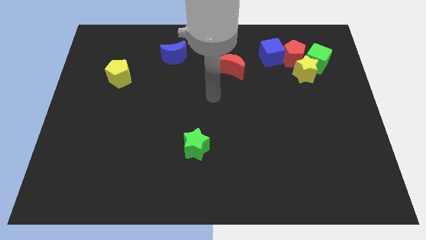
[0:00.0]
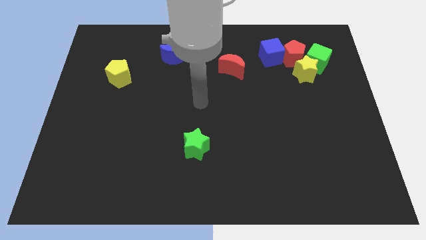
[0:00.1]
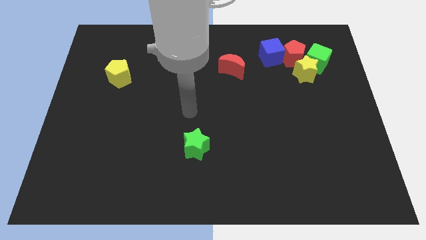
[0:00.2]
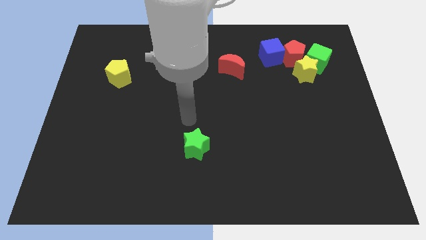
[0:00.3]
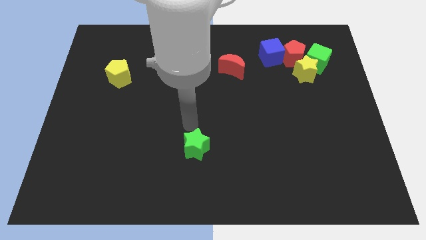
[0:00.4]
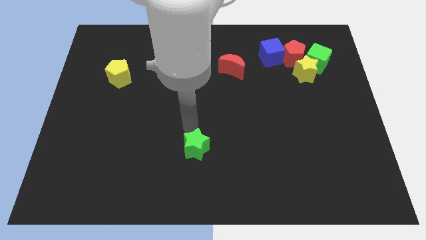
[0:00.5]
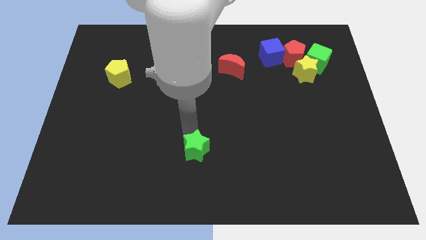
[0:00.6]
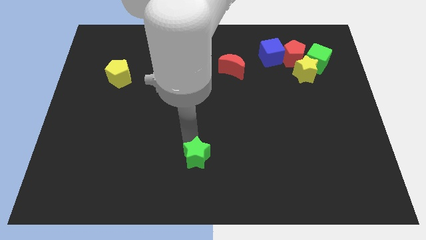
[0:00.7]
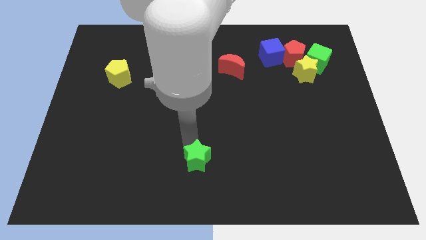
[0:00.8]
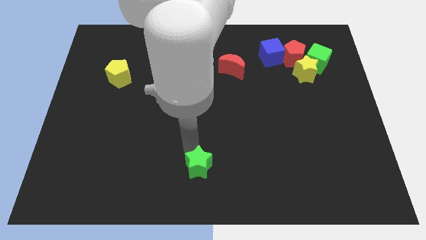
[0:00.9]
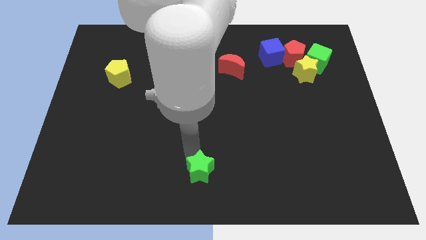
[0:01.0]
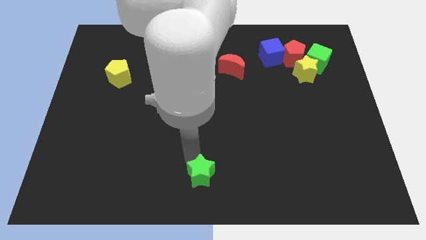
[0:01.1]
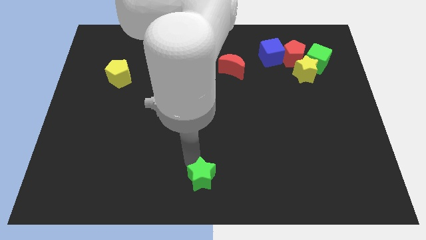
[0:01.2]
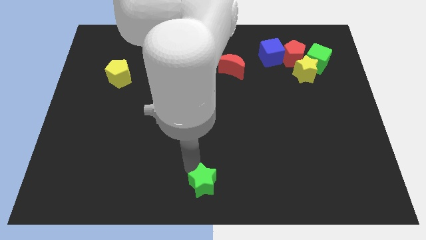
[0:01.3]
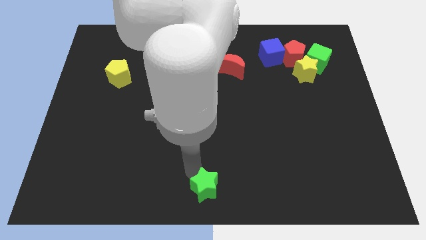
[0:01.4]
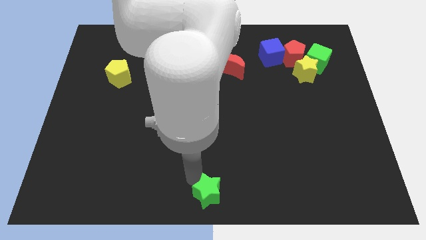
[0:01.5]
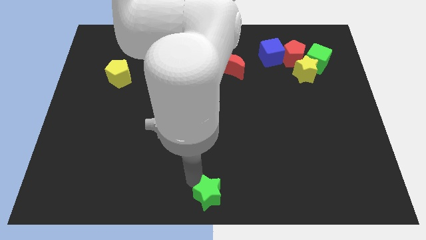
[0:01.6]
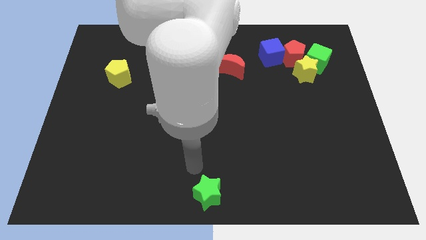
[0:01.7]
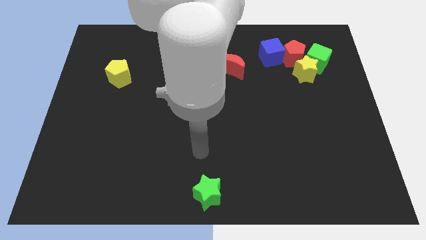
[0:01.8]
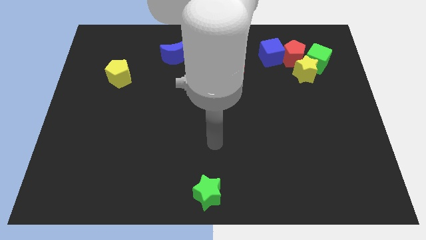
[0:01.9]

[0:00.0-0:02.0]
place the green star at the bottom center of the board

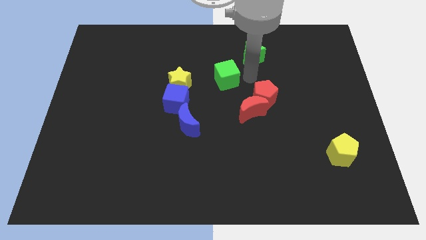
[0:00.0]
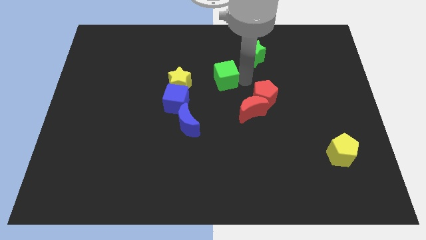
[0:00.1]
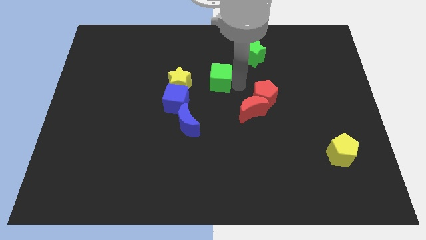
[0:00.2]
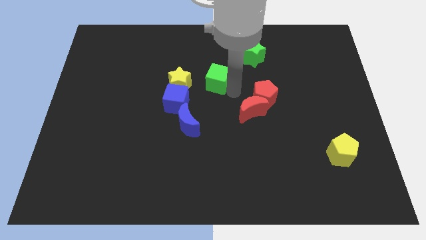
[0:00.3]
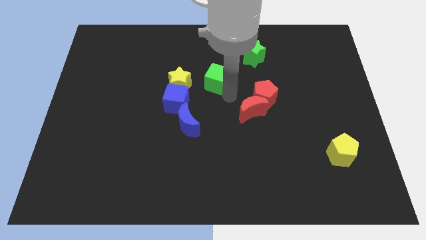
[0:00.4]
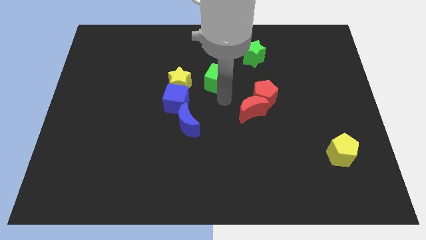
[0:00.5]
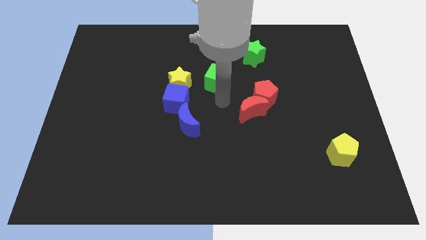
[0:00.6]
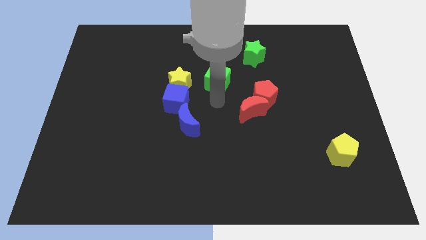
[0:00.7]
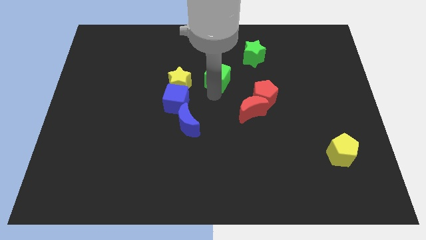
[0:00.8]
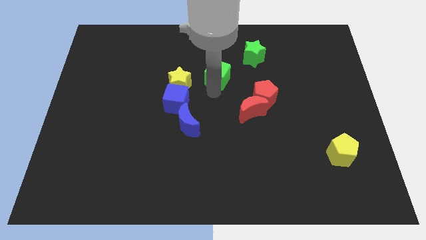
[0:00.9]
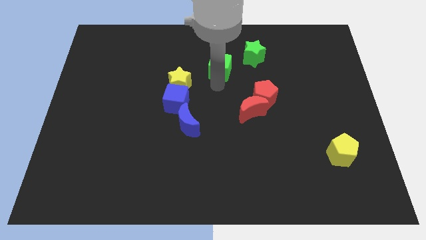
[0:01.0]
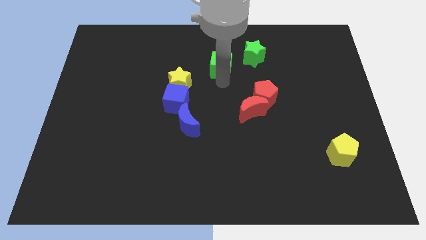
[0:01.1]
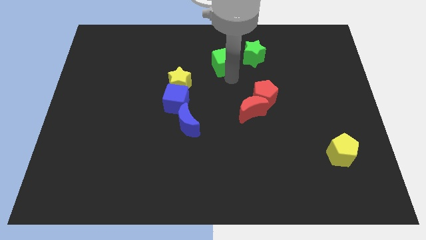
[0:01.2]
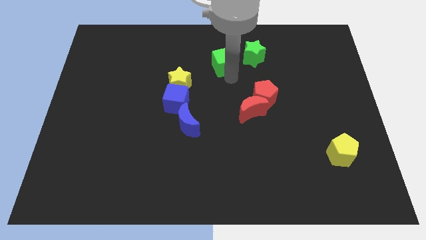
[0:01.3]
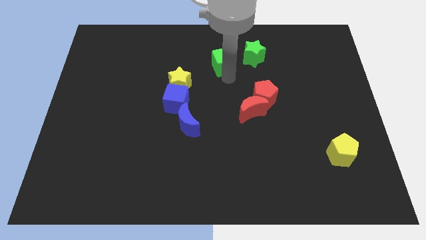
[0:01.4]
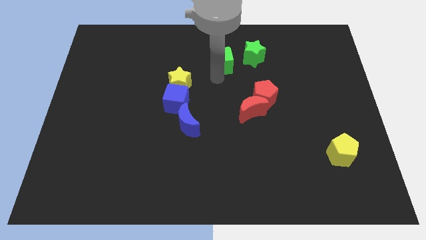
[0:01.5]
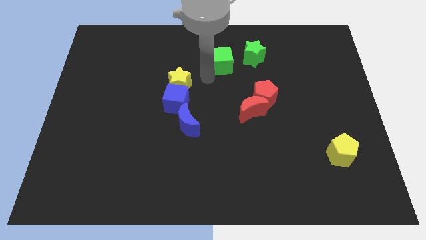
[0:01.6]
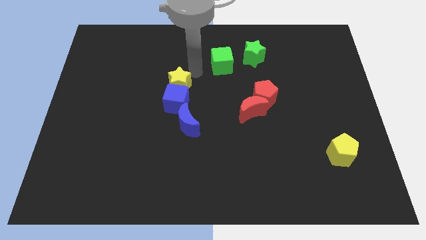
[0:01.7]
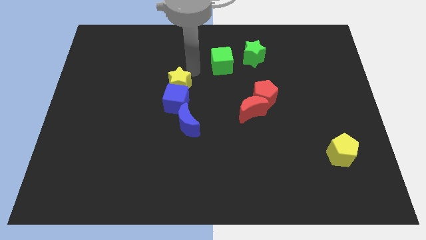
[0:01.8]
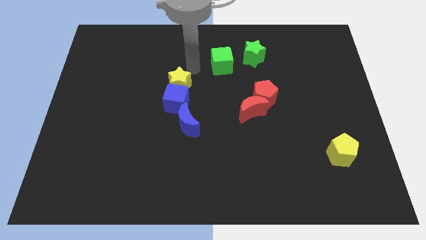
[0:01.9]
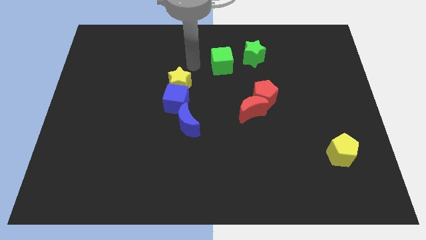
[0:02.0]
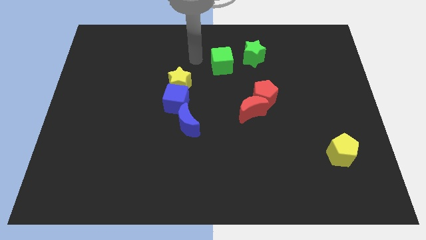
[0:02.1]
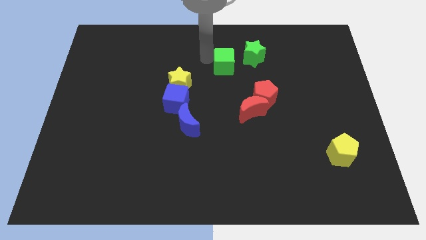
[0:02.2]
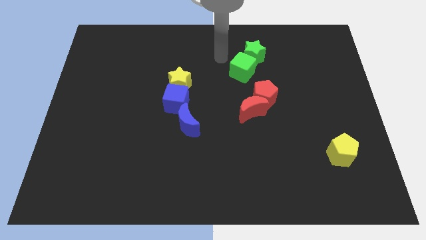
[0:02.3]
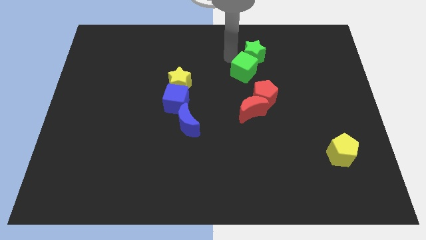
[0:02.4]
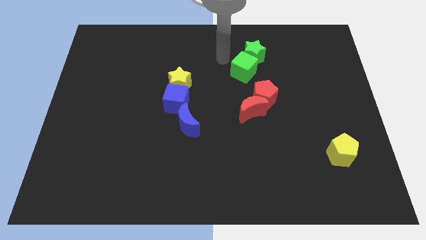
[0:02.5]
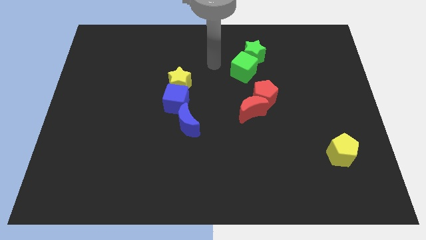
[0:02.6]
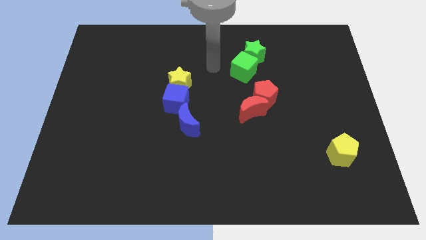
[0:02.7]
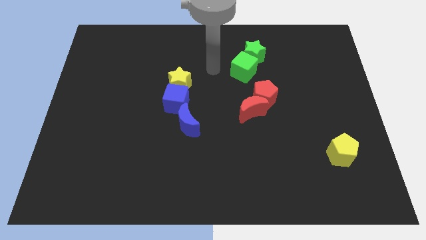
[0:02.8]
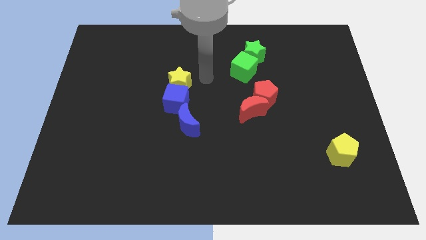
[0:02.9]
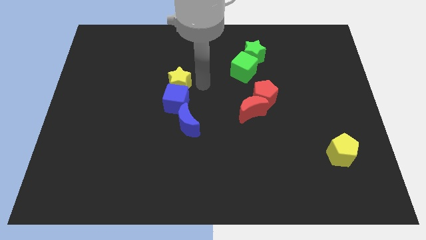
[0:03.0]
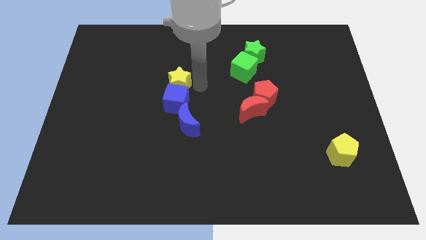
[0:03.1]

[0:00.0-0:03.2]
push the green cube near the green star

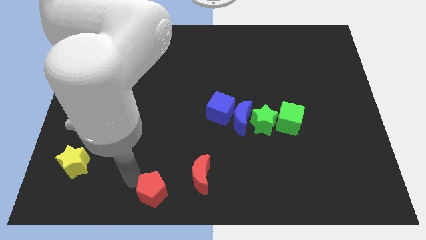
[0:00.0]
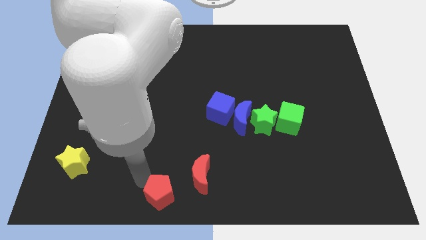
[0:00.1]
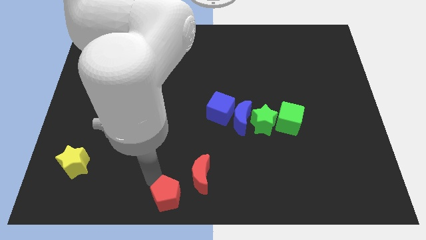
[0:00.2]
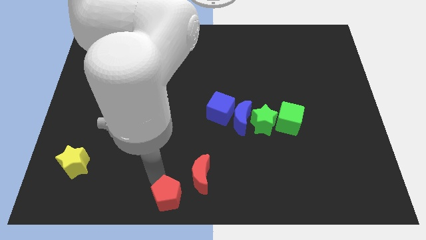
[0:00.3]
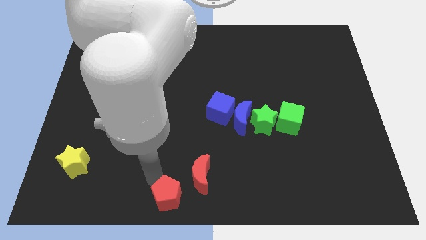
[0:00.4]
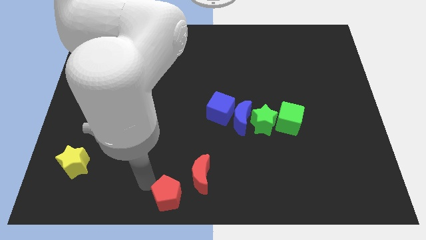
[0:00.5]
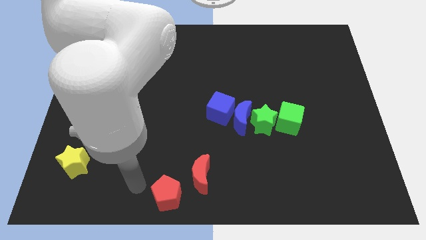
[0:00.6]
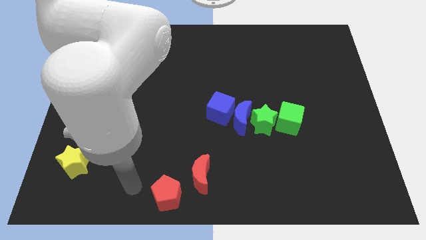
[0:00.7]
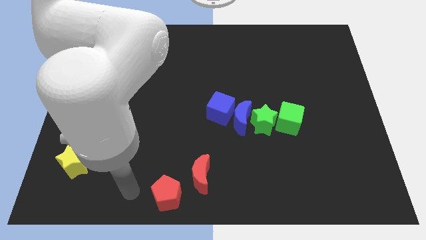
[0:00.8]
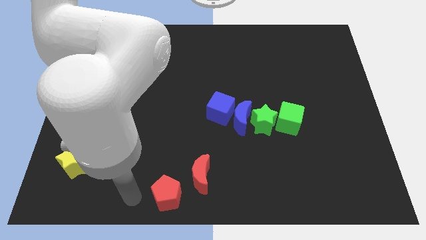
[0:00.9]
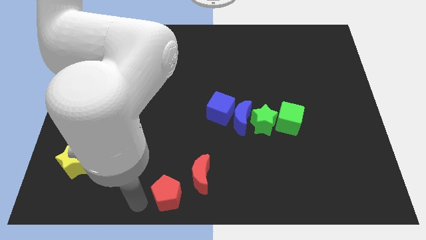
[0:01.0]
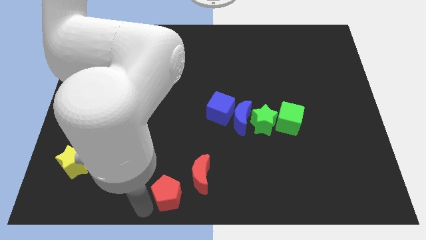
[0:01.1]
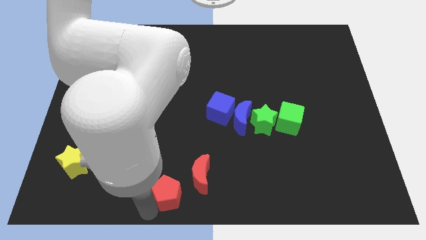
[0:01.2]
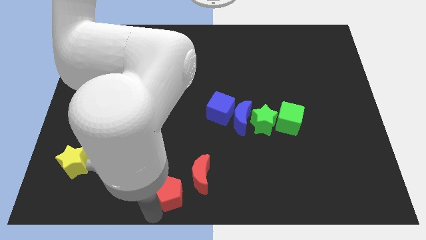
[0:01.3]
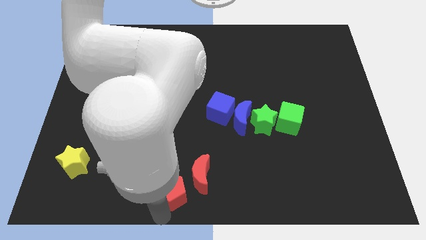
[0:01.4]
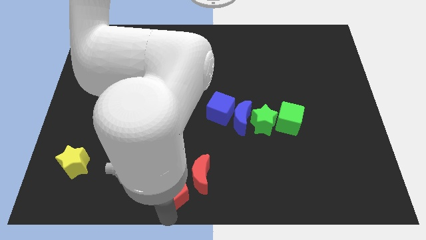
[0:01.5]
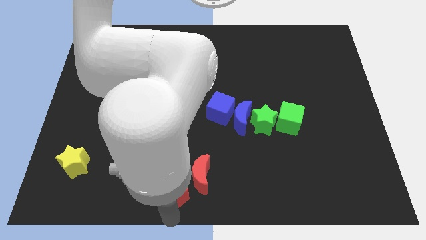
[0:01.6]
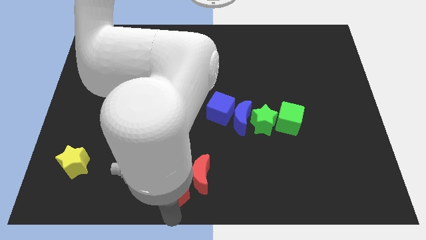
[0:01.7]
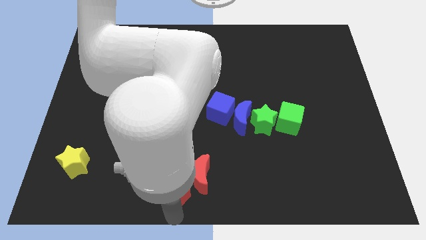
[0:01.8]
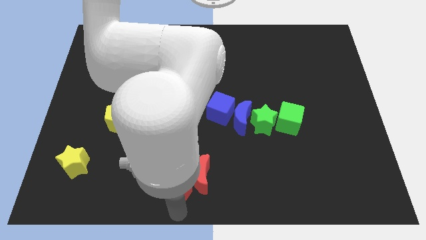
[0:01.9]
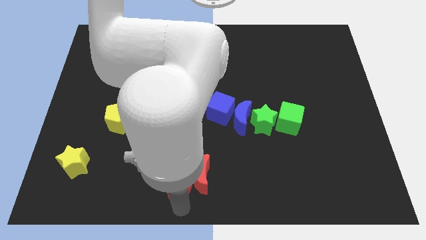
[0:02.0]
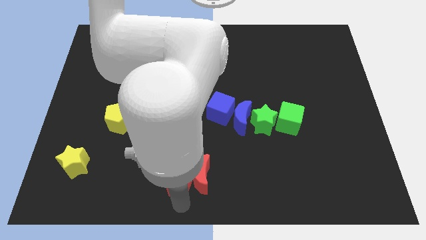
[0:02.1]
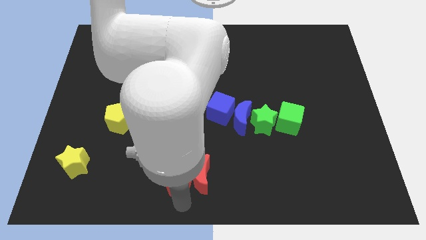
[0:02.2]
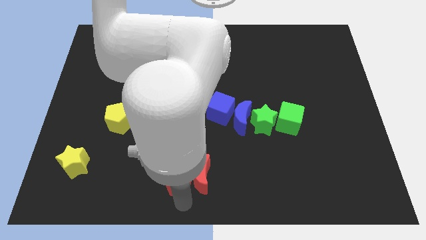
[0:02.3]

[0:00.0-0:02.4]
move the red pentagon left to the red crescent

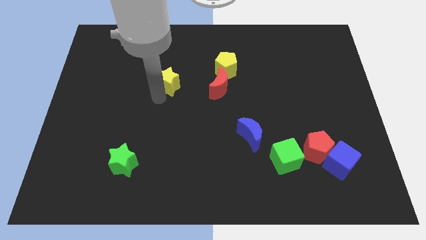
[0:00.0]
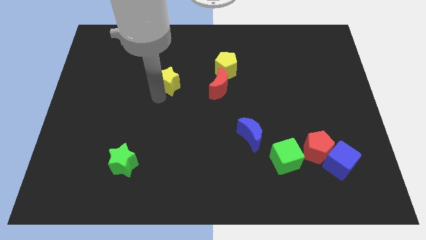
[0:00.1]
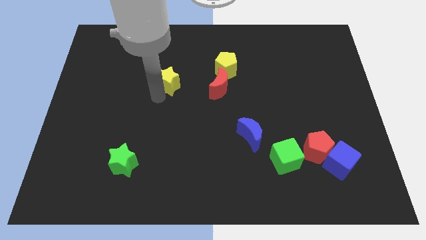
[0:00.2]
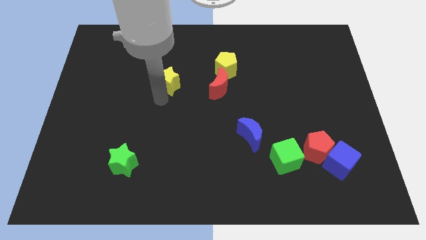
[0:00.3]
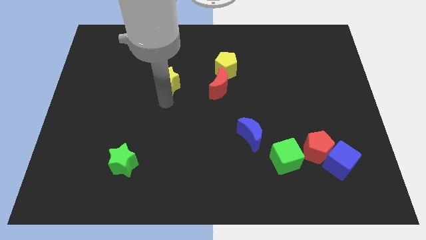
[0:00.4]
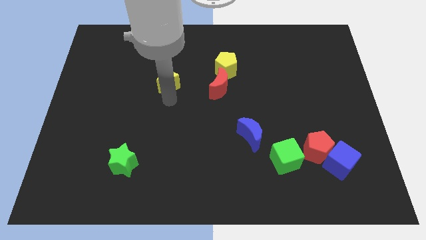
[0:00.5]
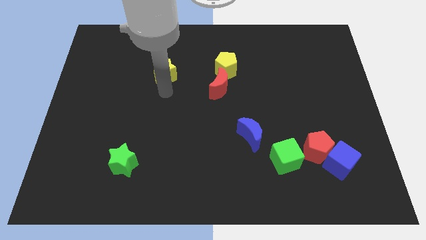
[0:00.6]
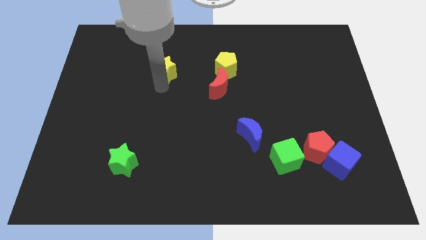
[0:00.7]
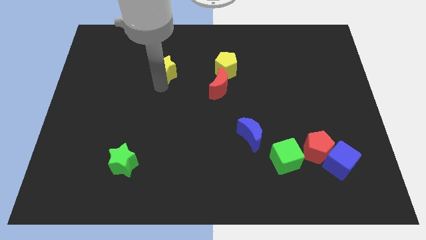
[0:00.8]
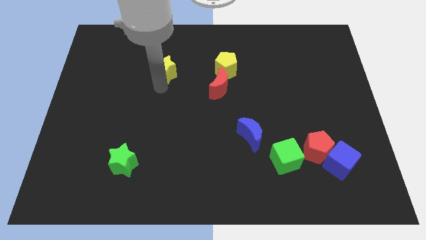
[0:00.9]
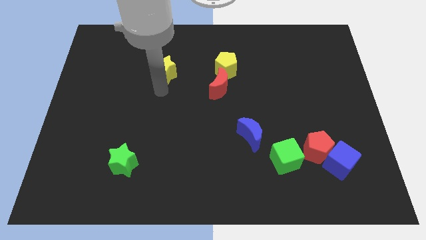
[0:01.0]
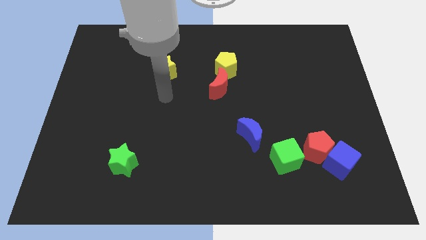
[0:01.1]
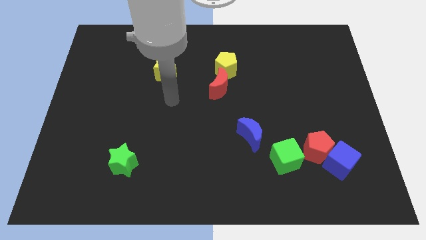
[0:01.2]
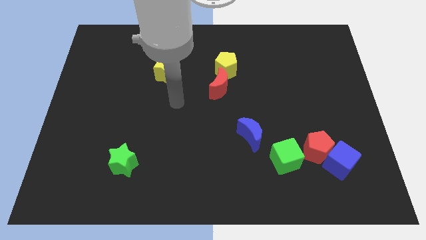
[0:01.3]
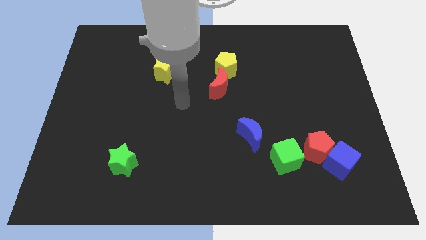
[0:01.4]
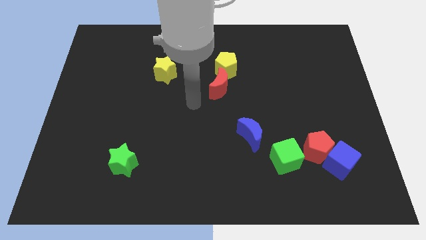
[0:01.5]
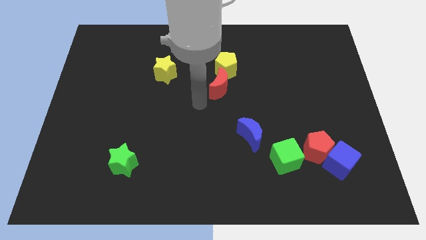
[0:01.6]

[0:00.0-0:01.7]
place the yellow star left to the yellow pentagon
